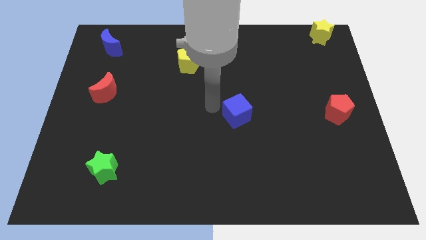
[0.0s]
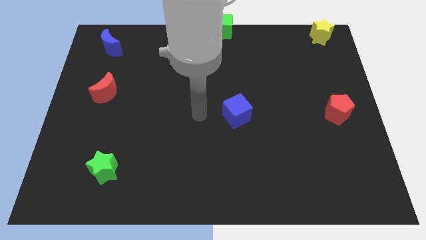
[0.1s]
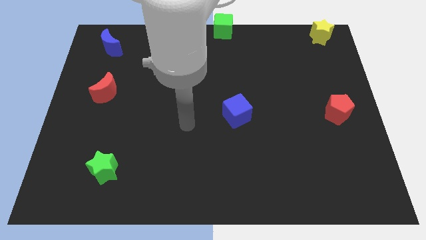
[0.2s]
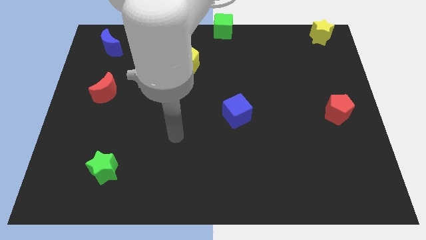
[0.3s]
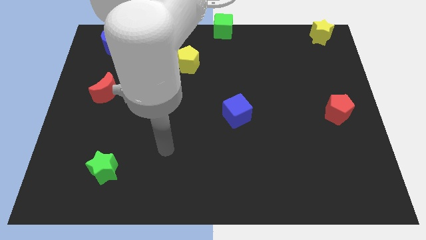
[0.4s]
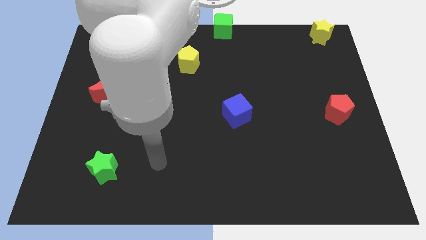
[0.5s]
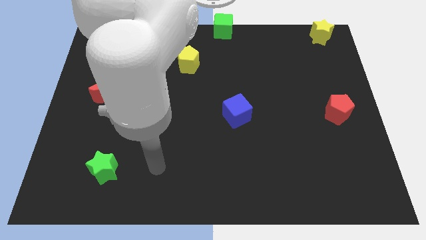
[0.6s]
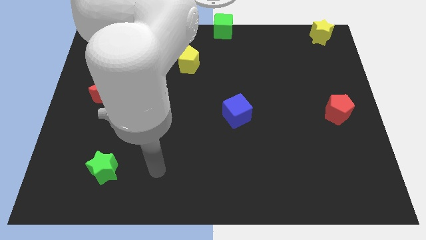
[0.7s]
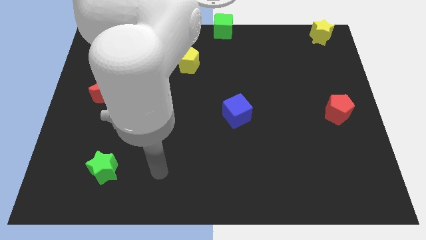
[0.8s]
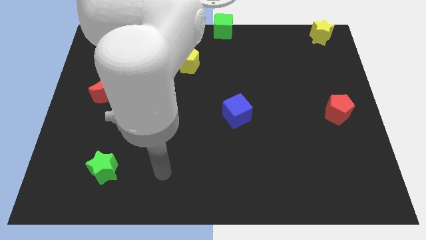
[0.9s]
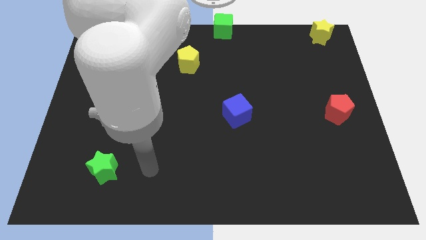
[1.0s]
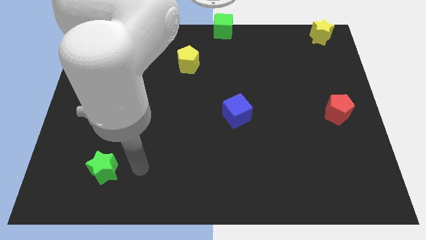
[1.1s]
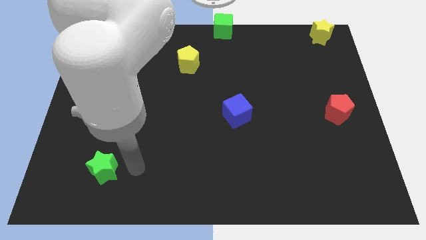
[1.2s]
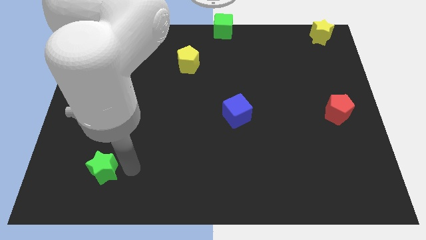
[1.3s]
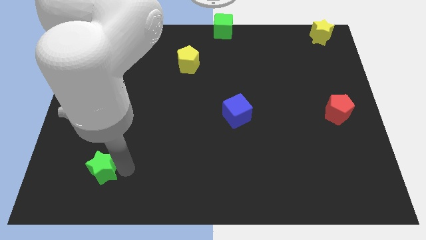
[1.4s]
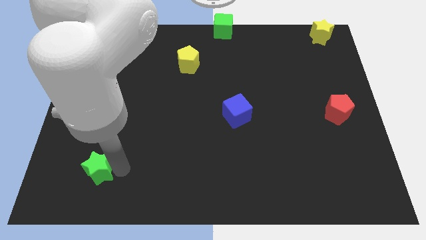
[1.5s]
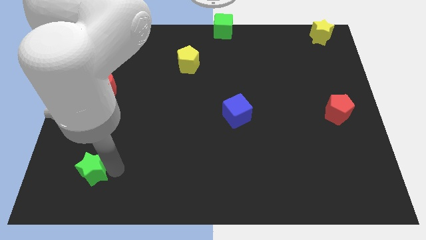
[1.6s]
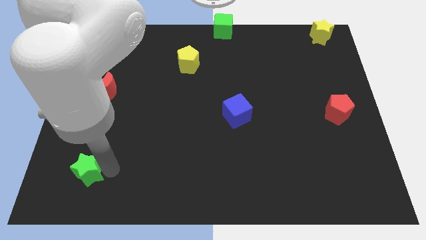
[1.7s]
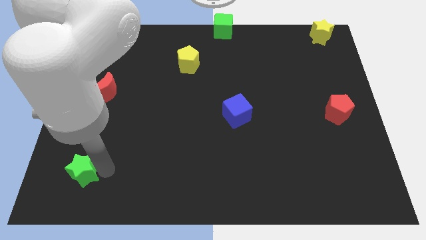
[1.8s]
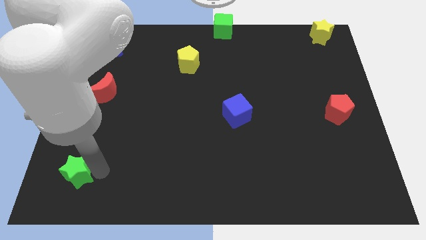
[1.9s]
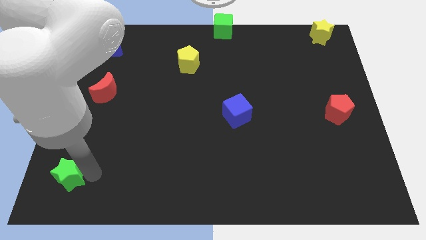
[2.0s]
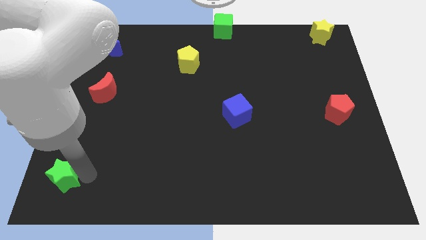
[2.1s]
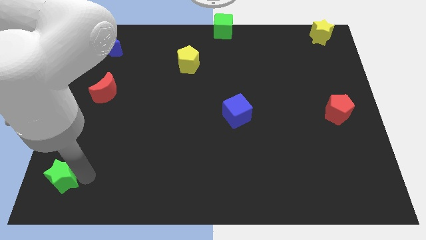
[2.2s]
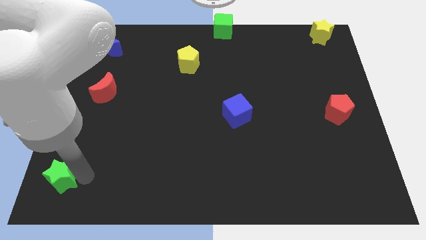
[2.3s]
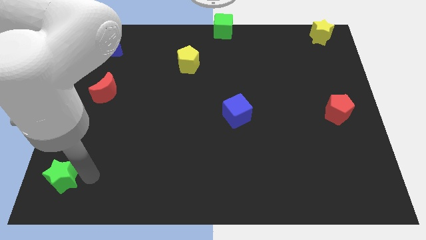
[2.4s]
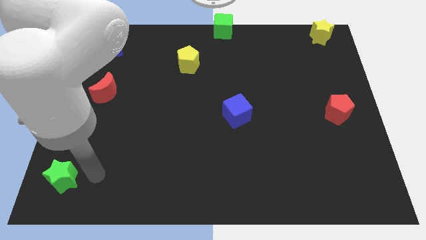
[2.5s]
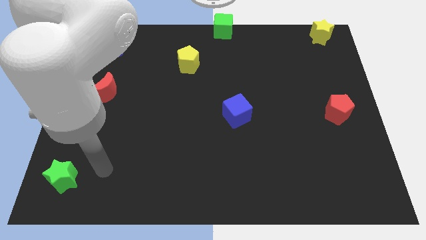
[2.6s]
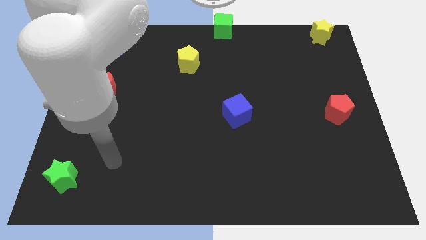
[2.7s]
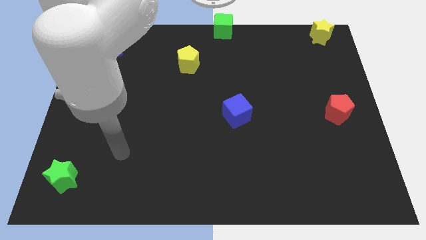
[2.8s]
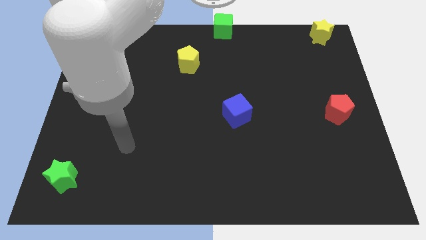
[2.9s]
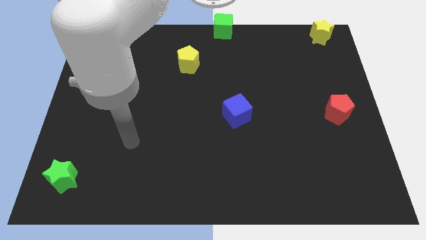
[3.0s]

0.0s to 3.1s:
move the green star towards the bottom left side of the board

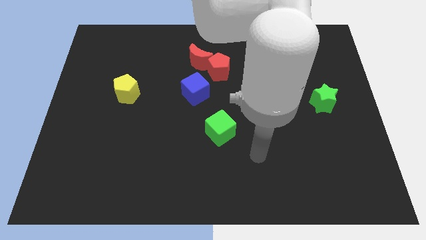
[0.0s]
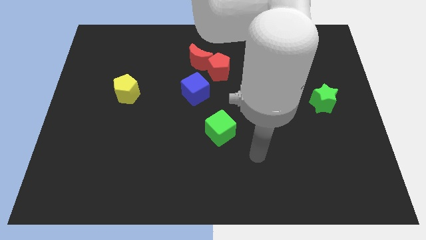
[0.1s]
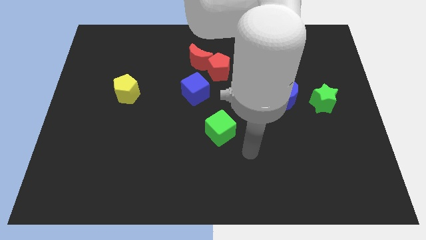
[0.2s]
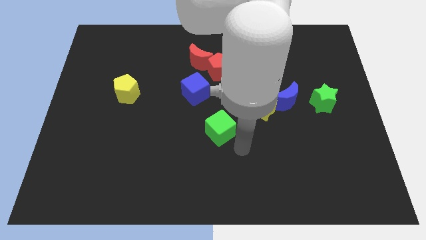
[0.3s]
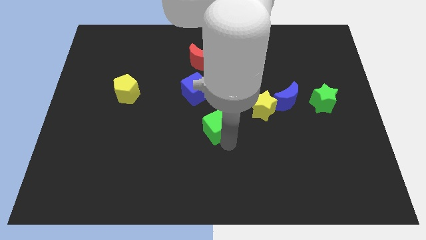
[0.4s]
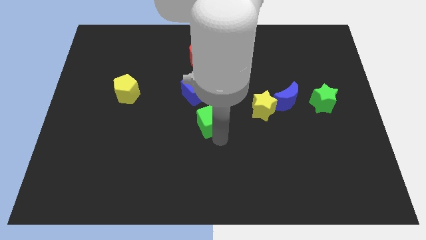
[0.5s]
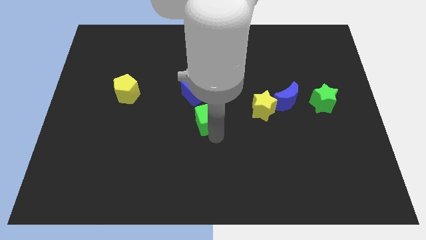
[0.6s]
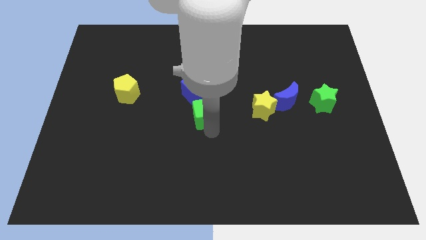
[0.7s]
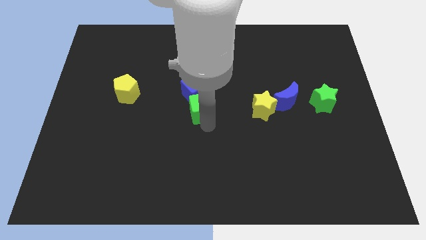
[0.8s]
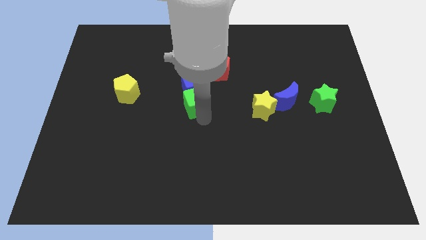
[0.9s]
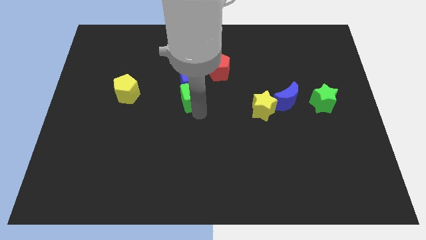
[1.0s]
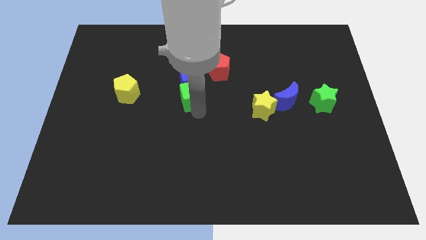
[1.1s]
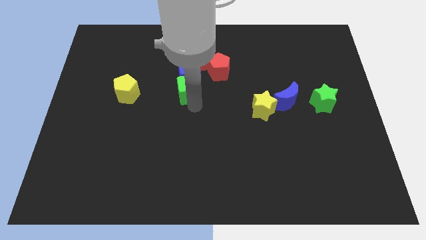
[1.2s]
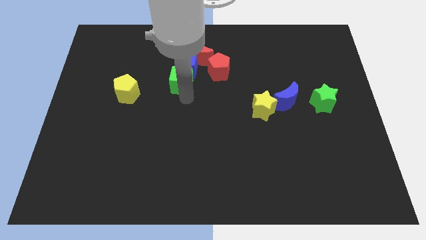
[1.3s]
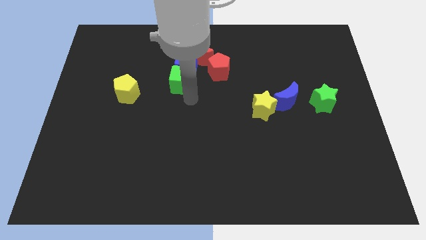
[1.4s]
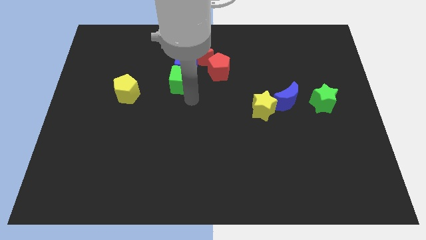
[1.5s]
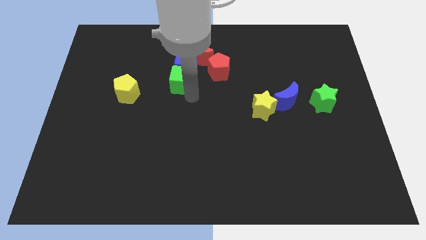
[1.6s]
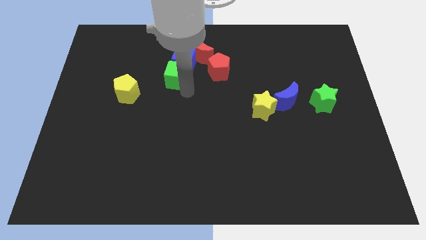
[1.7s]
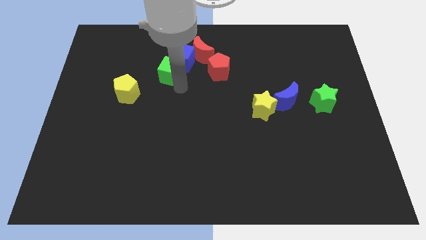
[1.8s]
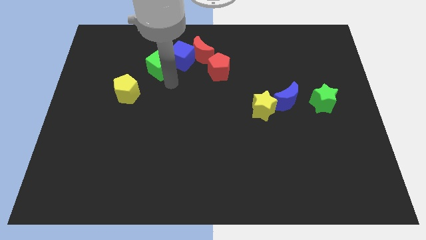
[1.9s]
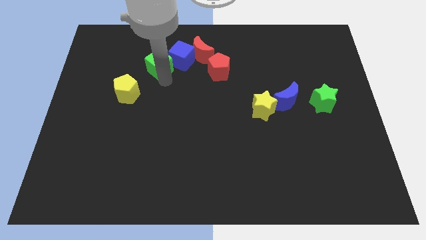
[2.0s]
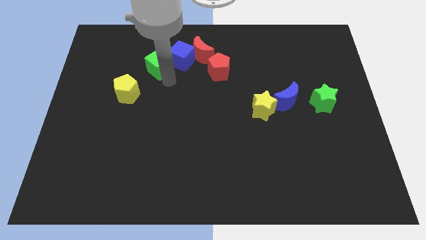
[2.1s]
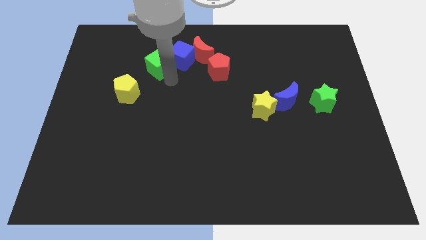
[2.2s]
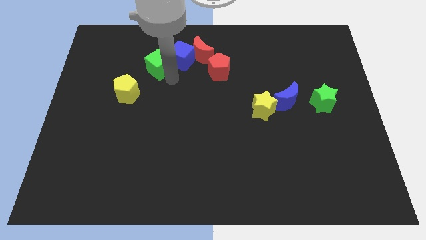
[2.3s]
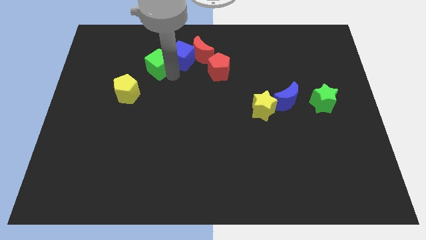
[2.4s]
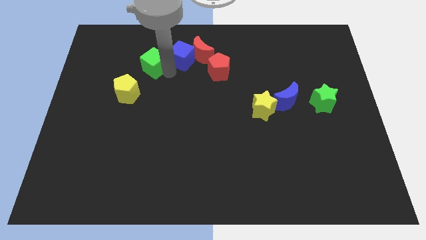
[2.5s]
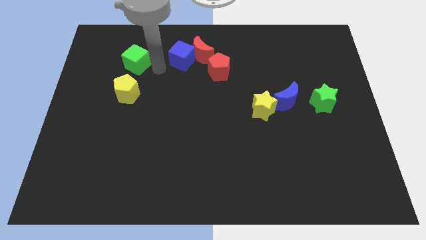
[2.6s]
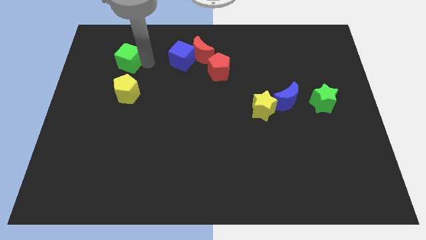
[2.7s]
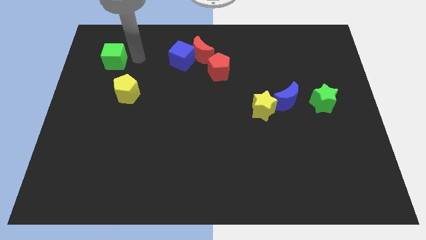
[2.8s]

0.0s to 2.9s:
move the green cube towards the top left corner

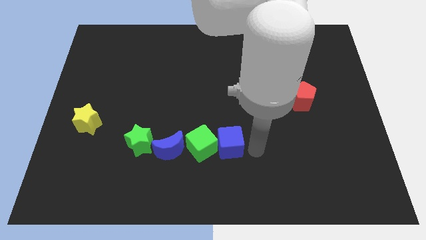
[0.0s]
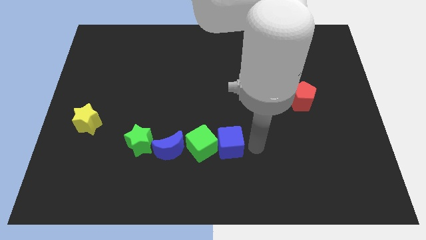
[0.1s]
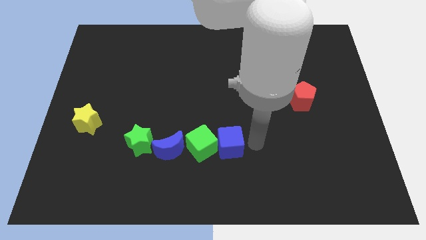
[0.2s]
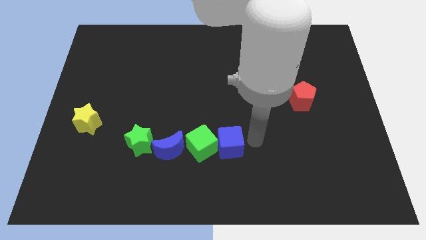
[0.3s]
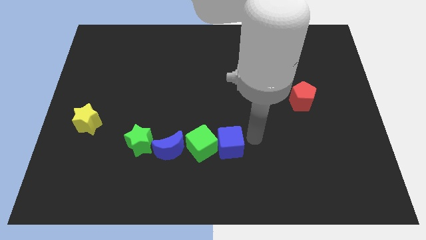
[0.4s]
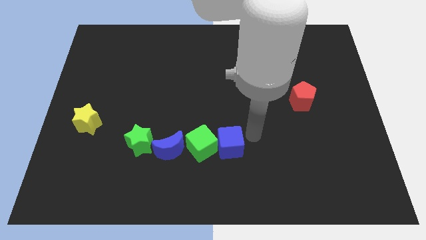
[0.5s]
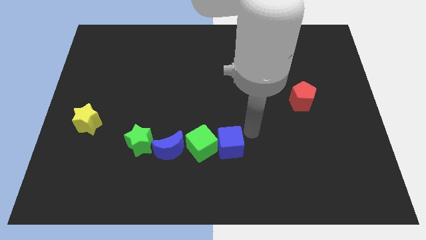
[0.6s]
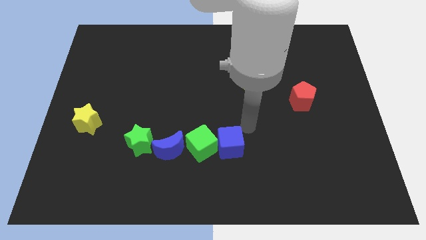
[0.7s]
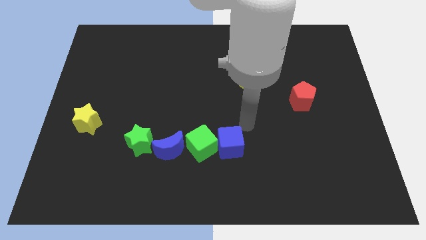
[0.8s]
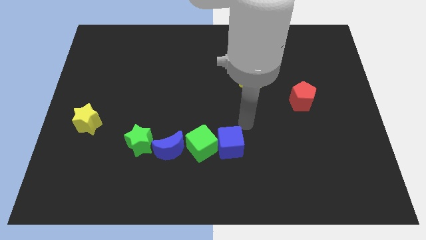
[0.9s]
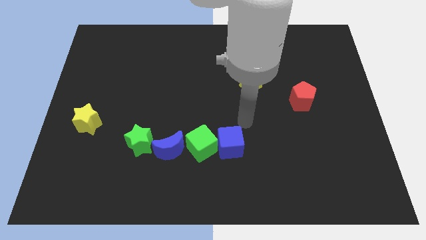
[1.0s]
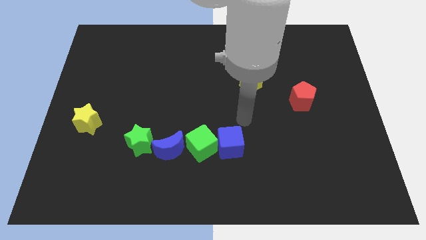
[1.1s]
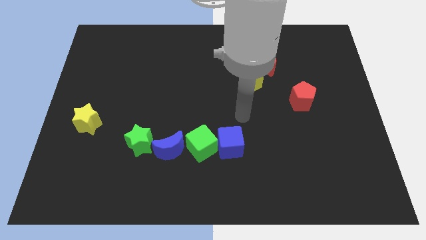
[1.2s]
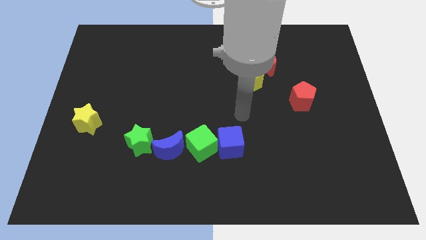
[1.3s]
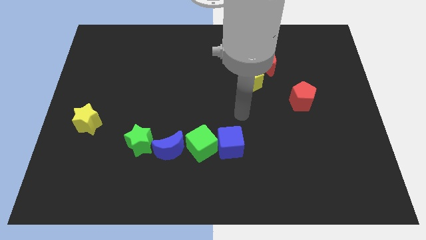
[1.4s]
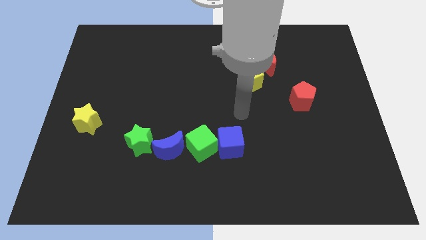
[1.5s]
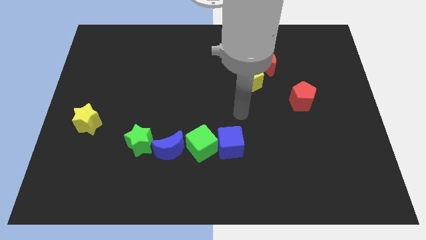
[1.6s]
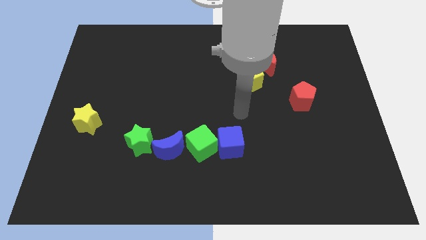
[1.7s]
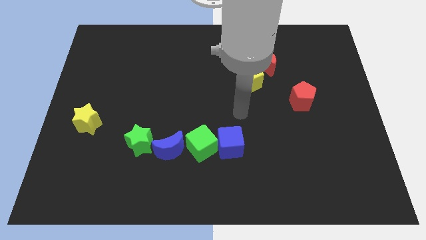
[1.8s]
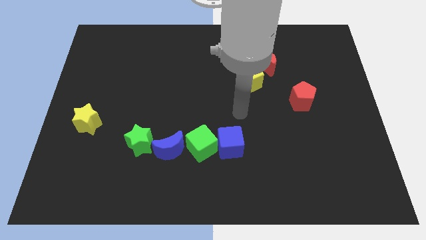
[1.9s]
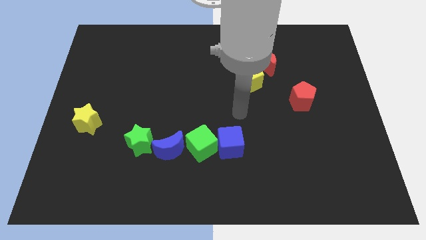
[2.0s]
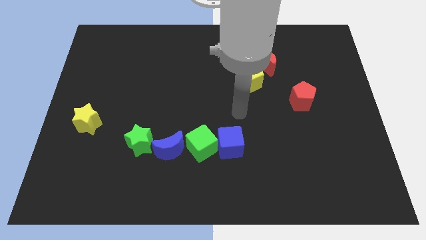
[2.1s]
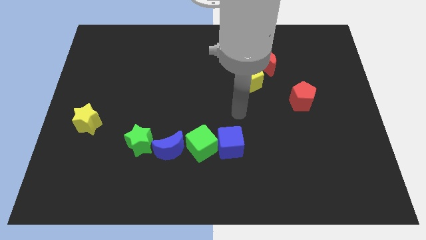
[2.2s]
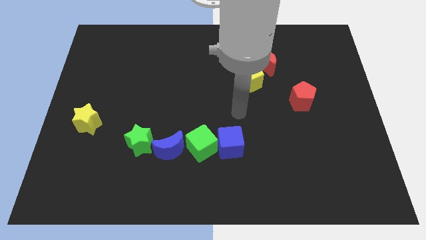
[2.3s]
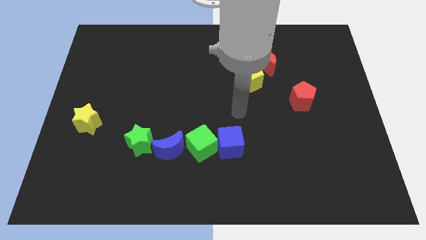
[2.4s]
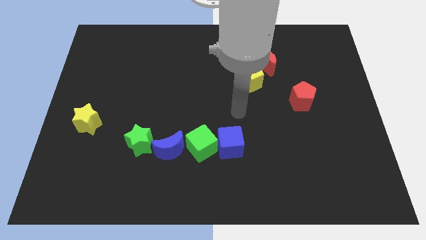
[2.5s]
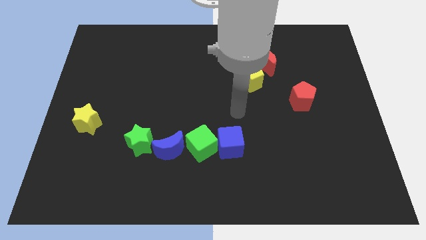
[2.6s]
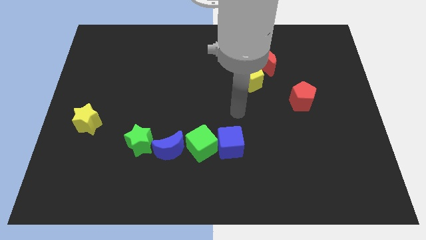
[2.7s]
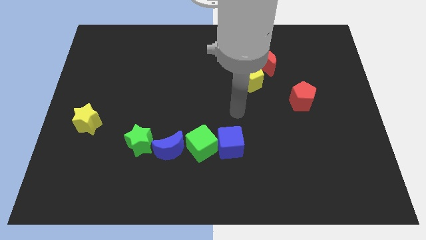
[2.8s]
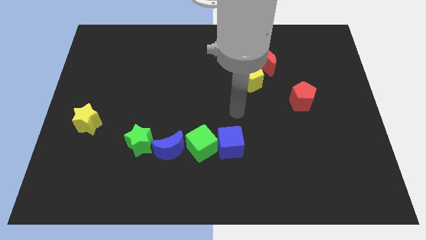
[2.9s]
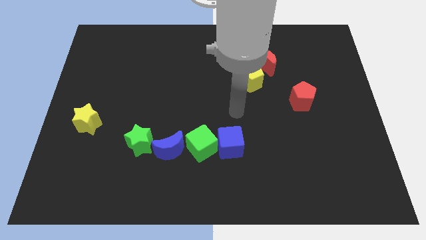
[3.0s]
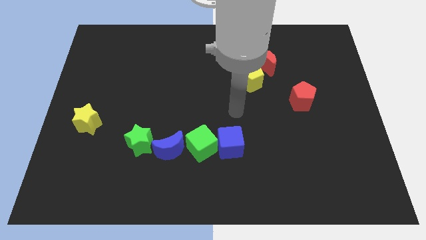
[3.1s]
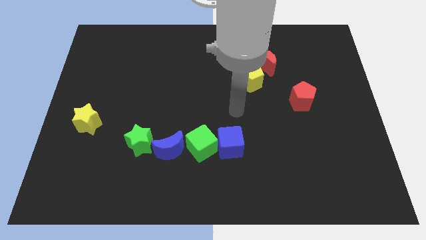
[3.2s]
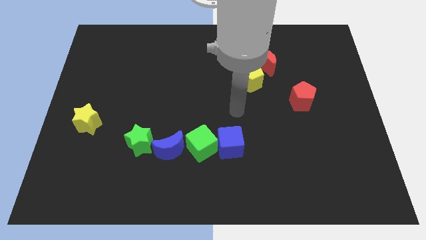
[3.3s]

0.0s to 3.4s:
put your hand vertically above the blue cube
